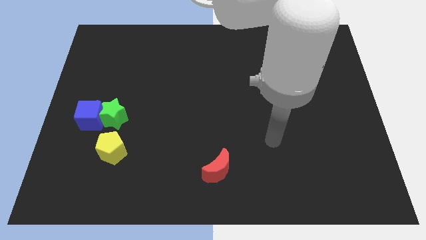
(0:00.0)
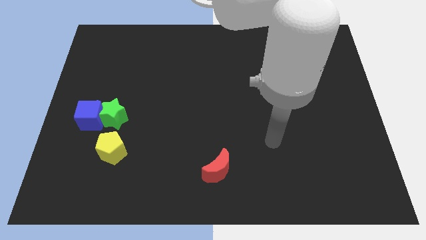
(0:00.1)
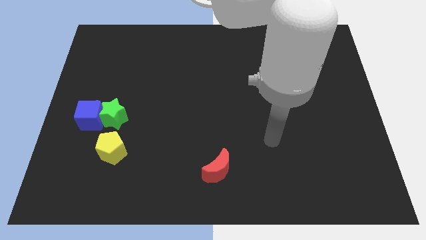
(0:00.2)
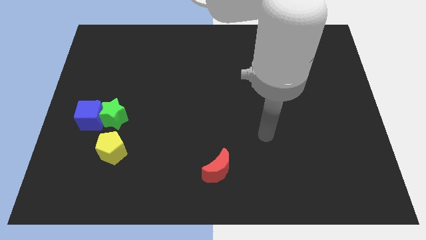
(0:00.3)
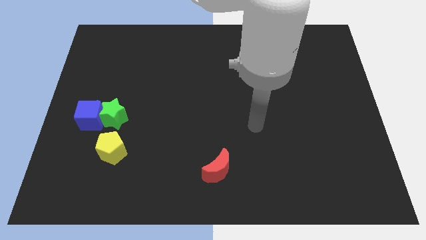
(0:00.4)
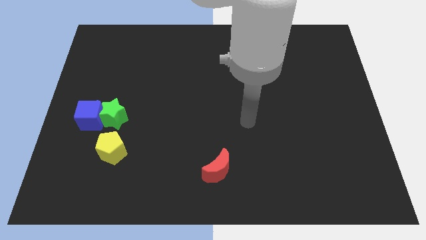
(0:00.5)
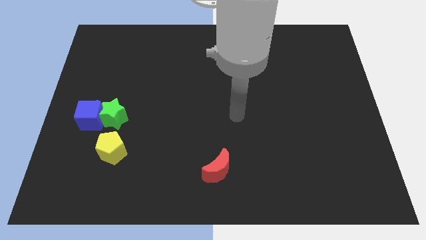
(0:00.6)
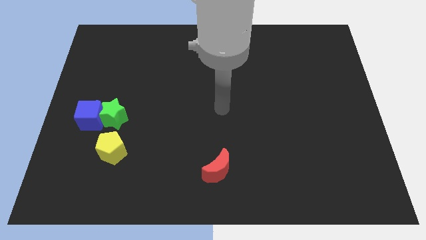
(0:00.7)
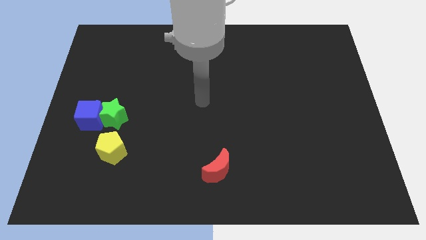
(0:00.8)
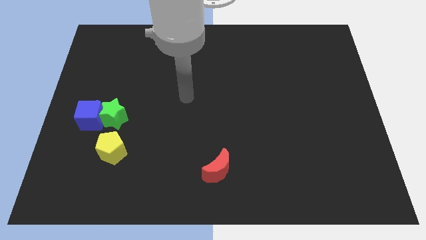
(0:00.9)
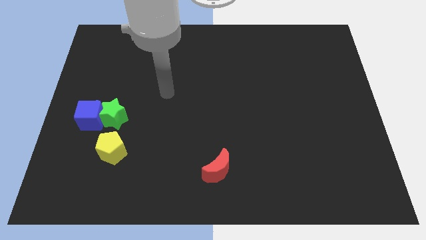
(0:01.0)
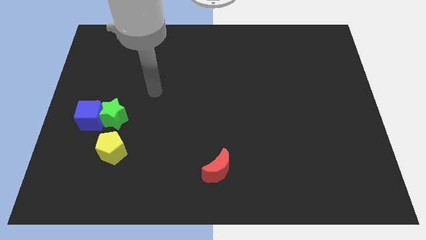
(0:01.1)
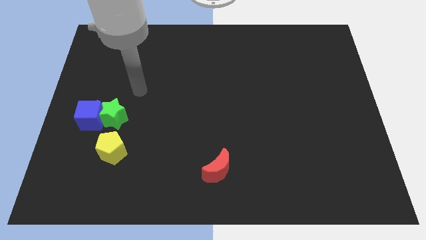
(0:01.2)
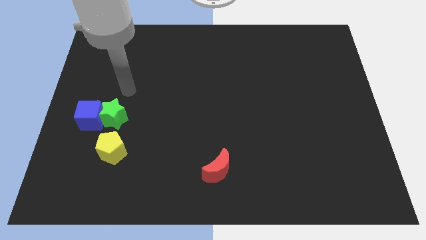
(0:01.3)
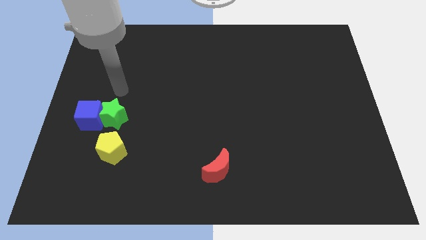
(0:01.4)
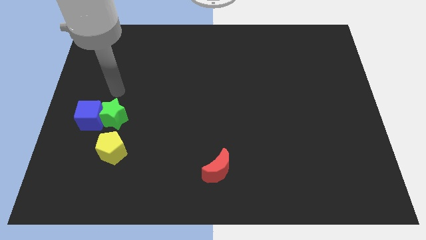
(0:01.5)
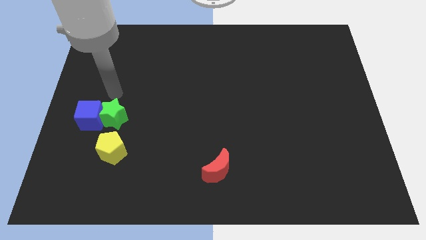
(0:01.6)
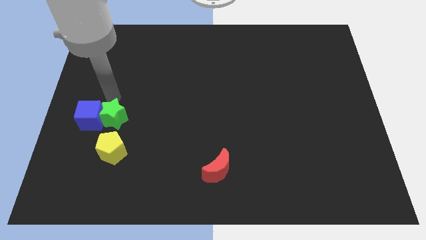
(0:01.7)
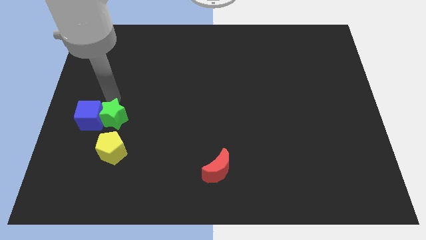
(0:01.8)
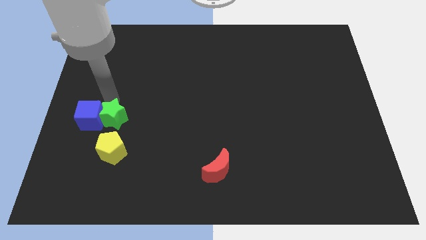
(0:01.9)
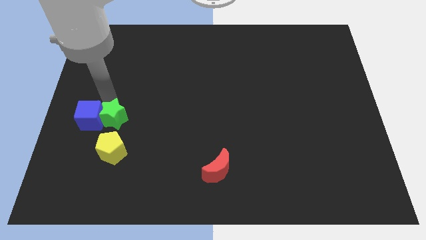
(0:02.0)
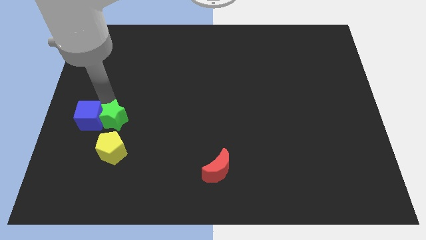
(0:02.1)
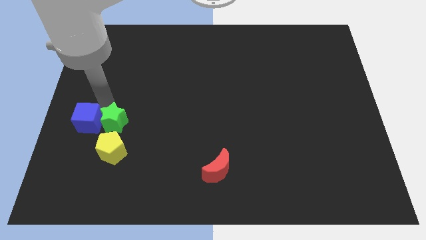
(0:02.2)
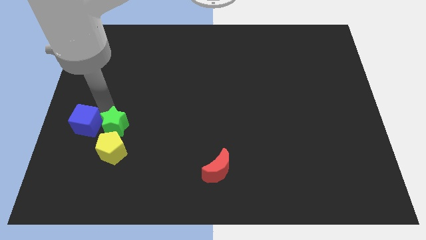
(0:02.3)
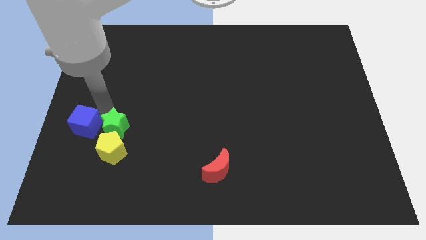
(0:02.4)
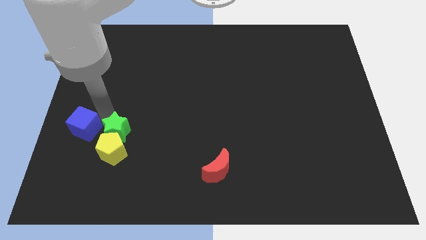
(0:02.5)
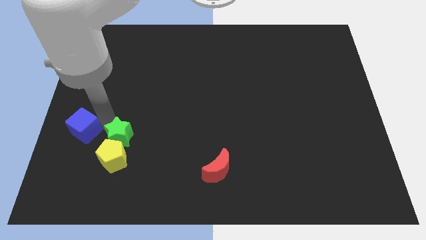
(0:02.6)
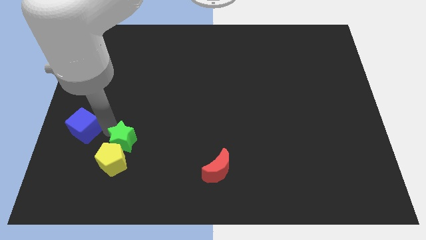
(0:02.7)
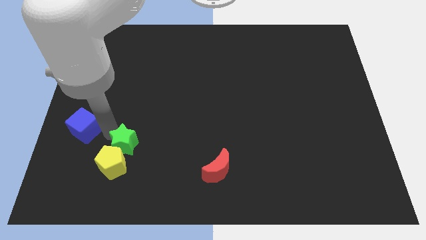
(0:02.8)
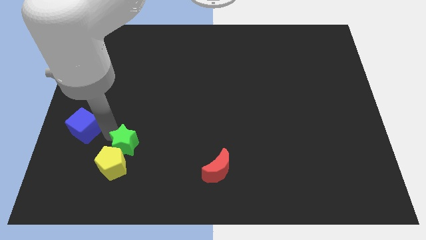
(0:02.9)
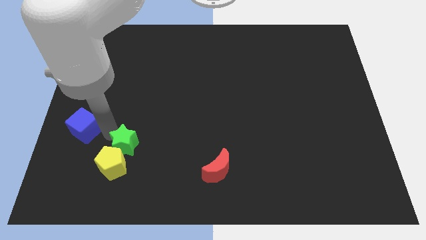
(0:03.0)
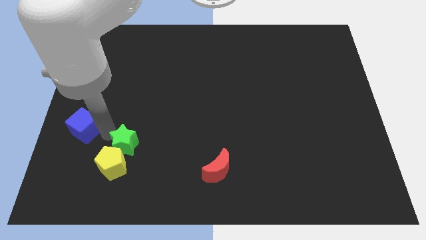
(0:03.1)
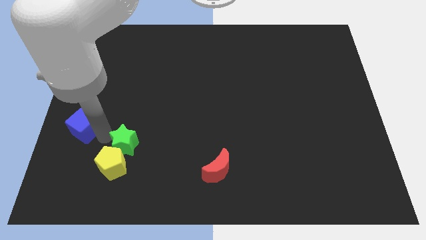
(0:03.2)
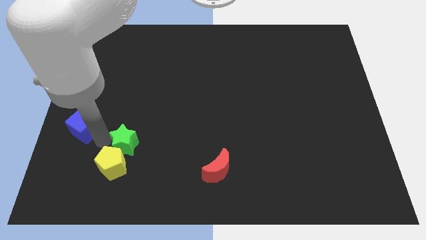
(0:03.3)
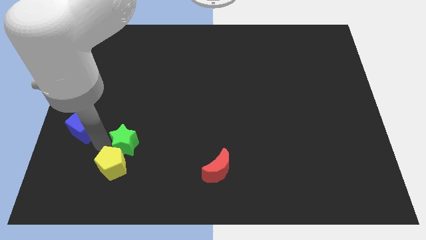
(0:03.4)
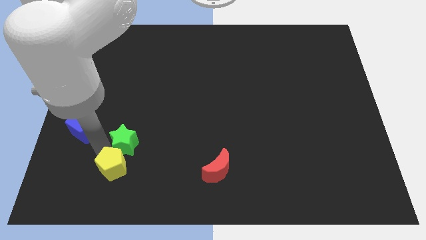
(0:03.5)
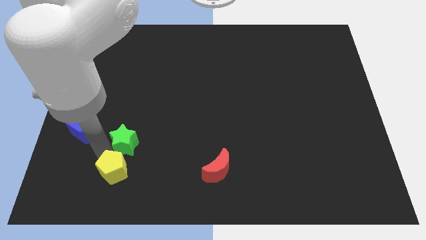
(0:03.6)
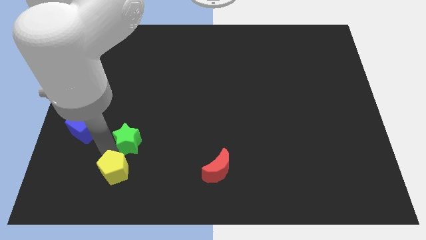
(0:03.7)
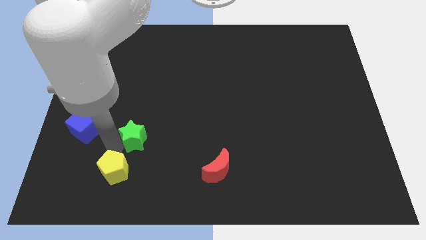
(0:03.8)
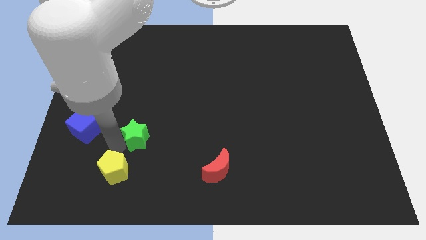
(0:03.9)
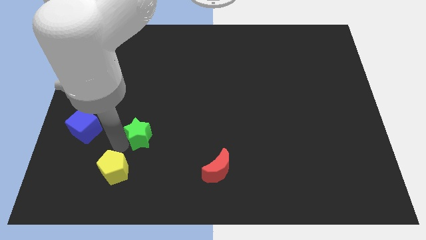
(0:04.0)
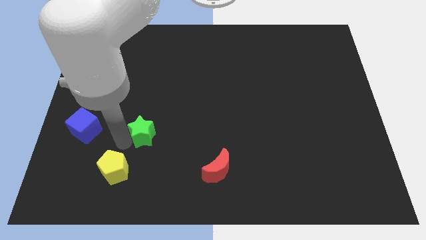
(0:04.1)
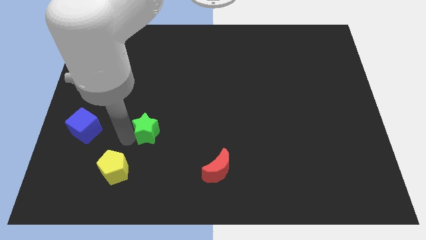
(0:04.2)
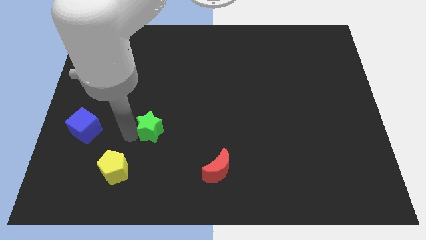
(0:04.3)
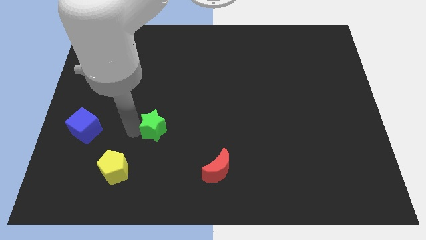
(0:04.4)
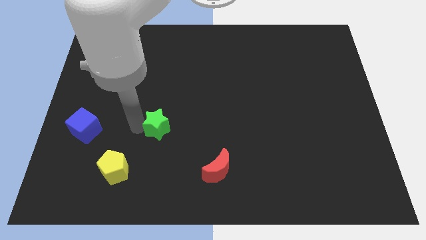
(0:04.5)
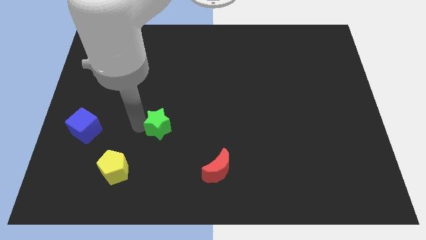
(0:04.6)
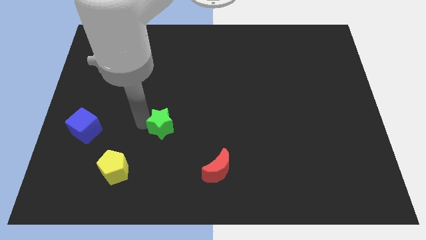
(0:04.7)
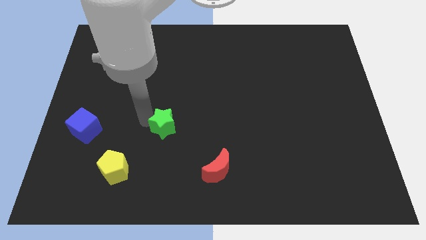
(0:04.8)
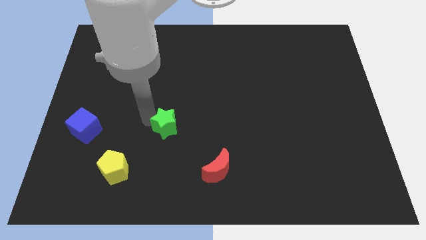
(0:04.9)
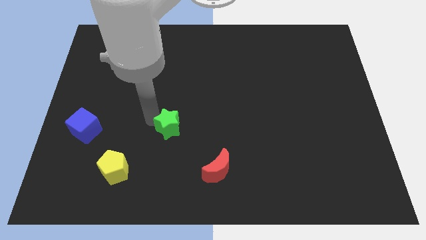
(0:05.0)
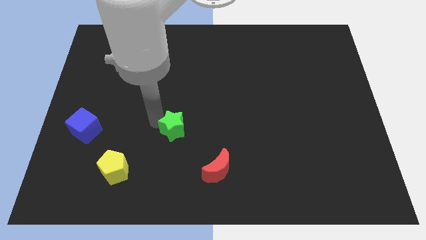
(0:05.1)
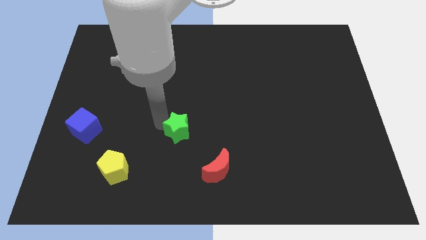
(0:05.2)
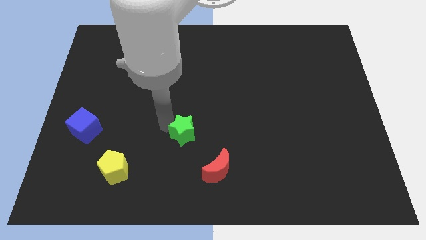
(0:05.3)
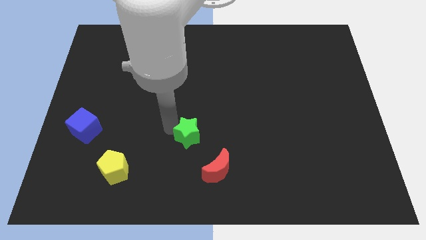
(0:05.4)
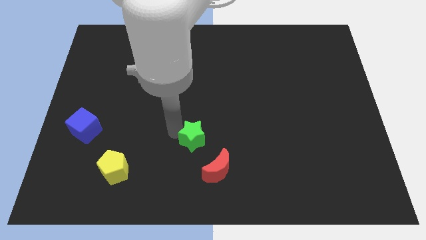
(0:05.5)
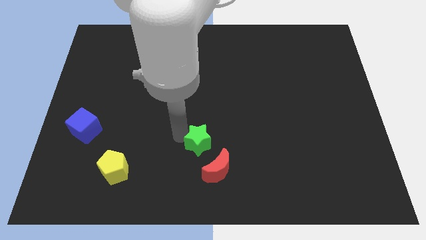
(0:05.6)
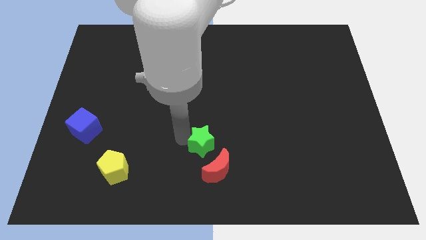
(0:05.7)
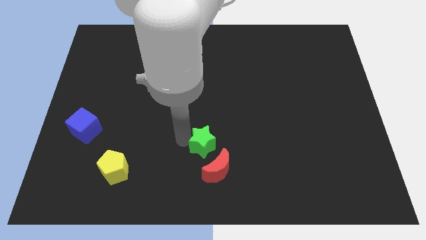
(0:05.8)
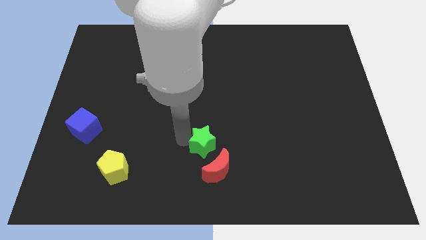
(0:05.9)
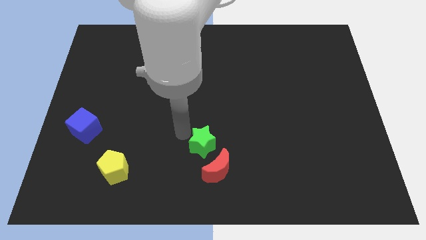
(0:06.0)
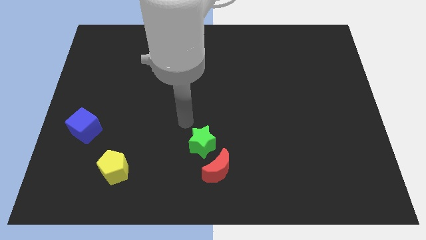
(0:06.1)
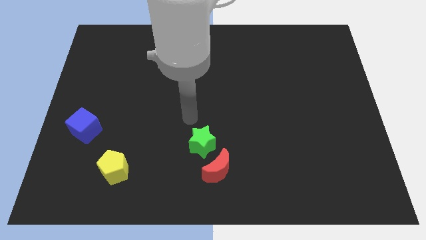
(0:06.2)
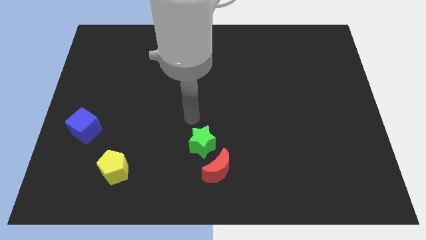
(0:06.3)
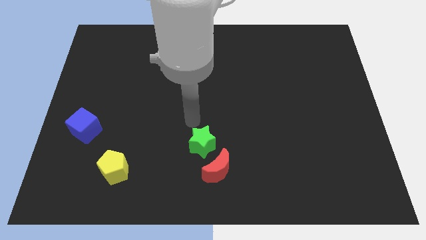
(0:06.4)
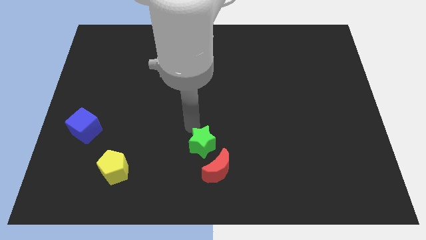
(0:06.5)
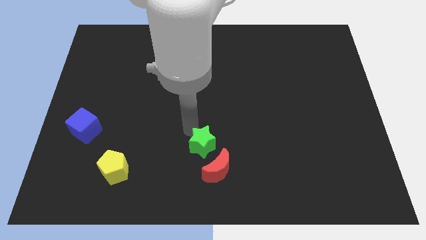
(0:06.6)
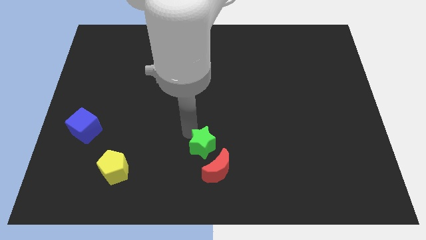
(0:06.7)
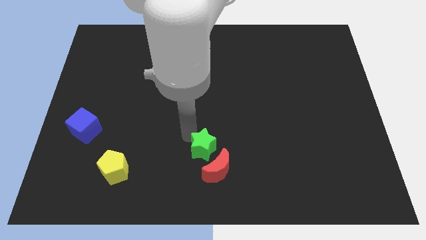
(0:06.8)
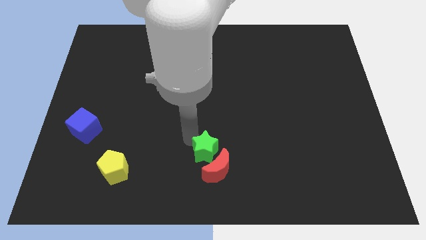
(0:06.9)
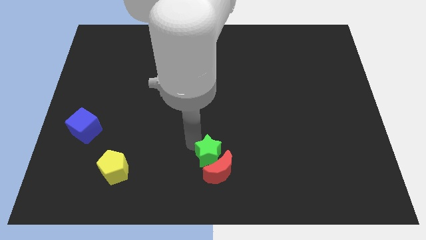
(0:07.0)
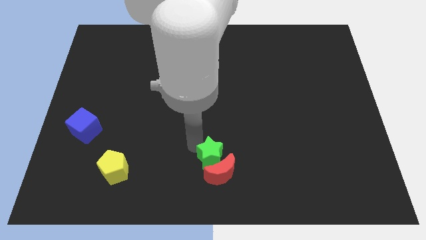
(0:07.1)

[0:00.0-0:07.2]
slide the green block towards the moon

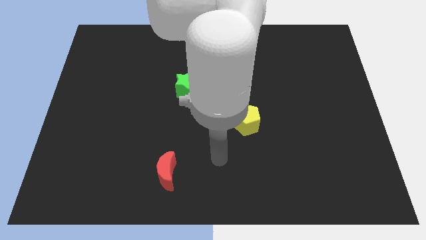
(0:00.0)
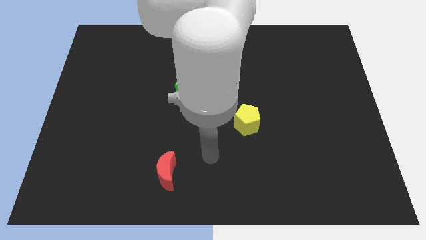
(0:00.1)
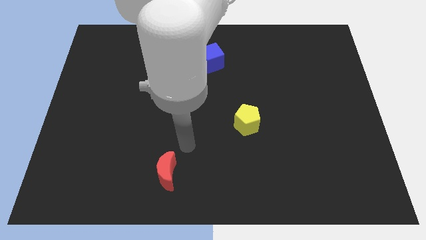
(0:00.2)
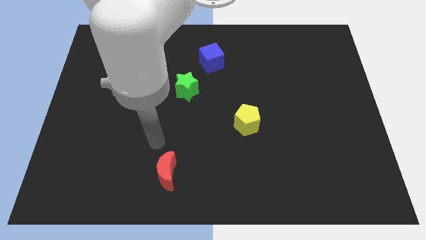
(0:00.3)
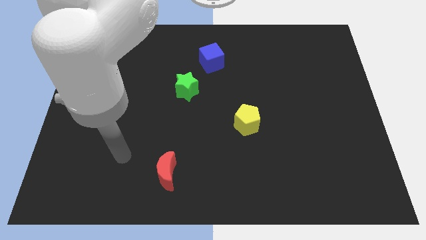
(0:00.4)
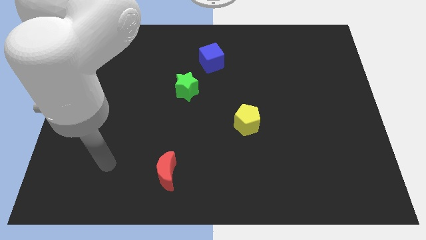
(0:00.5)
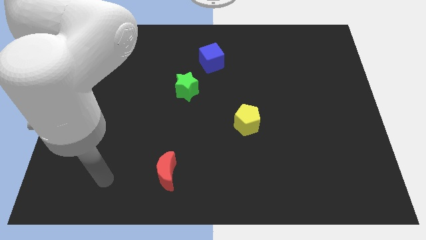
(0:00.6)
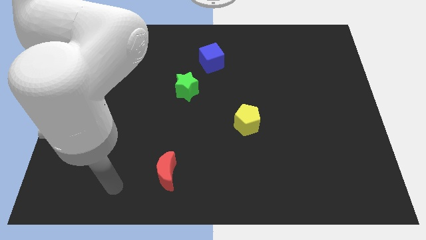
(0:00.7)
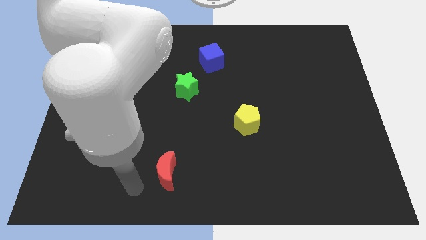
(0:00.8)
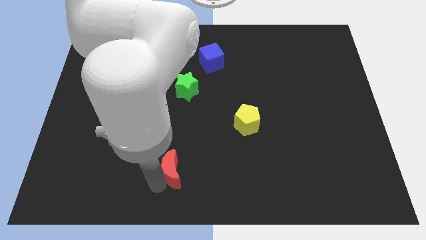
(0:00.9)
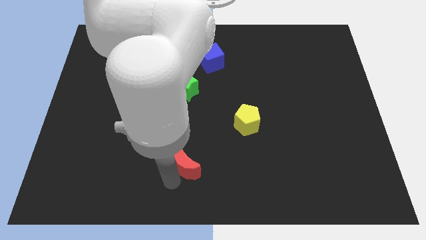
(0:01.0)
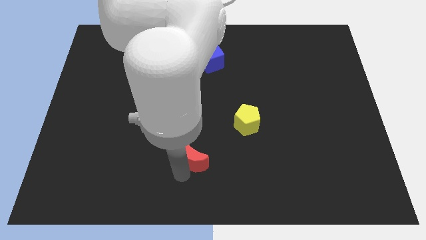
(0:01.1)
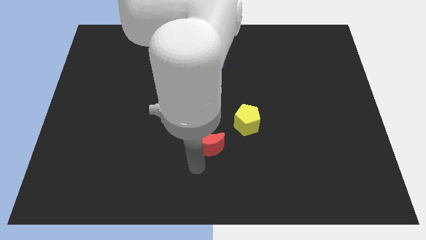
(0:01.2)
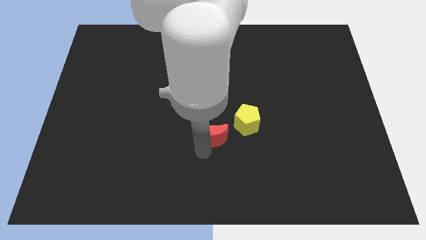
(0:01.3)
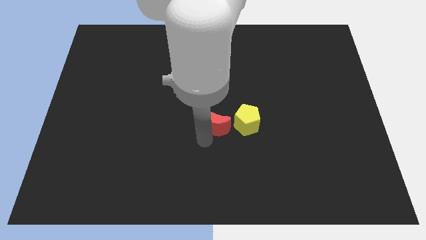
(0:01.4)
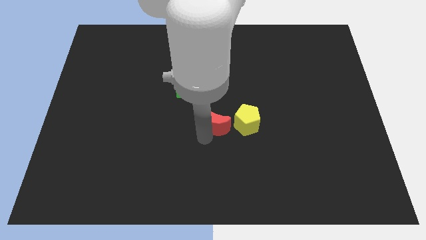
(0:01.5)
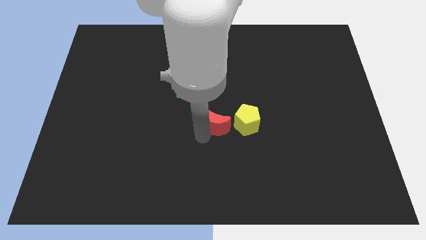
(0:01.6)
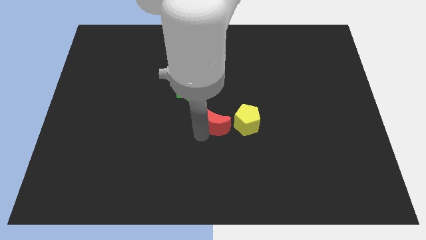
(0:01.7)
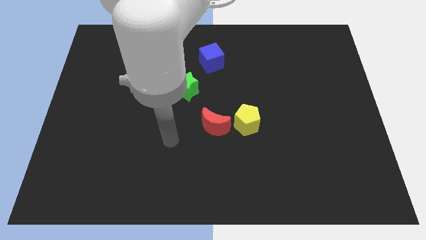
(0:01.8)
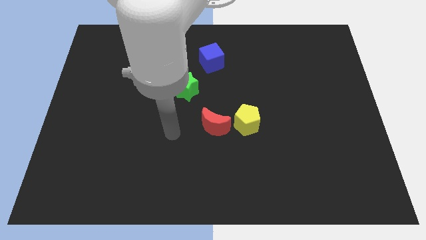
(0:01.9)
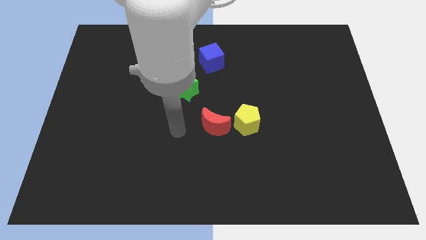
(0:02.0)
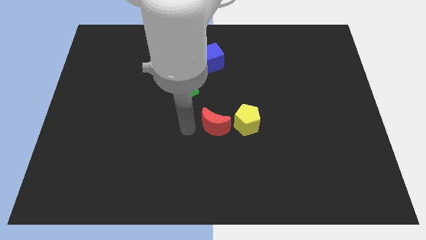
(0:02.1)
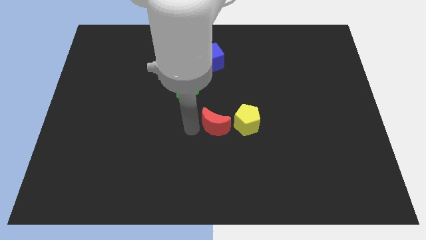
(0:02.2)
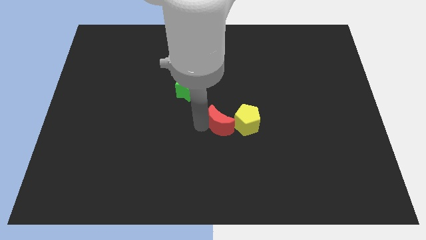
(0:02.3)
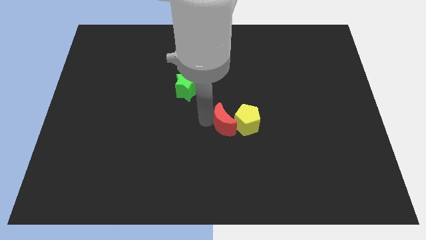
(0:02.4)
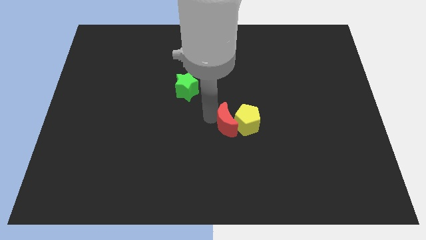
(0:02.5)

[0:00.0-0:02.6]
push the red moon towards the yellow block
